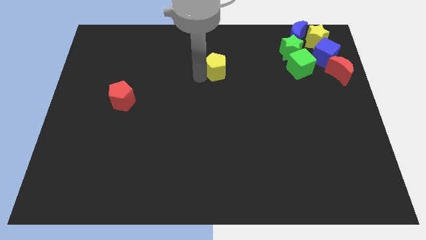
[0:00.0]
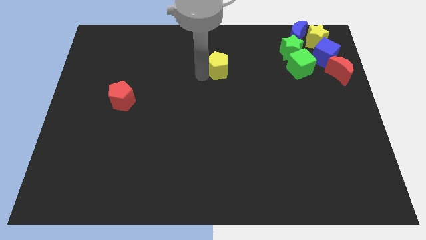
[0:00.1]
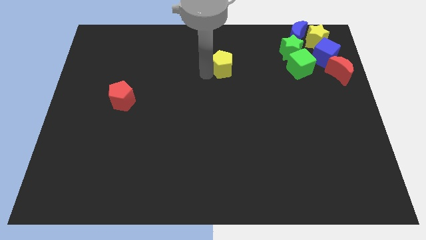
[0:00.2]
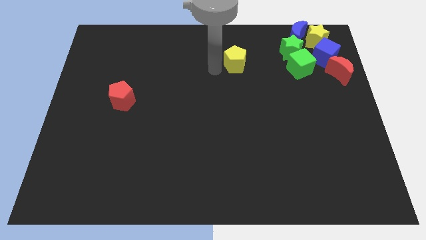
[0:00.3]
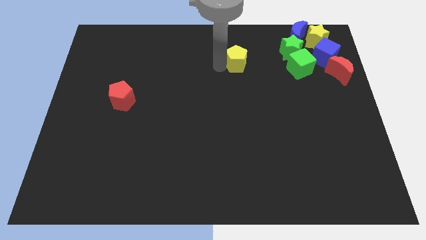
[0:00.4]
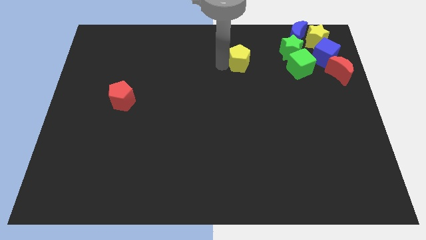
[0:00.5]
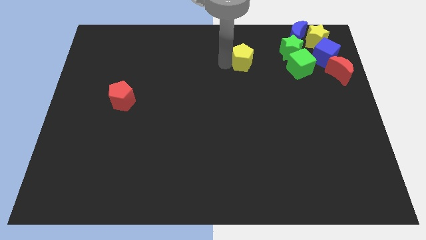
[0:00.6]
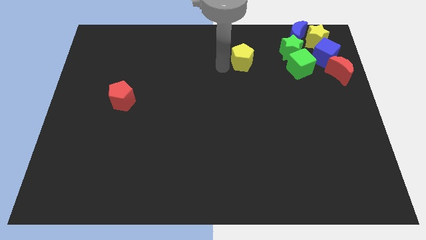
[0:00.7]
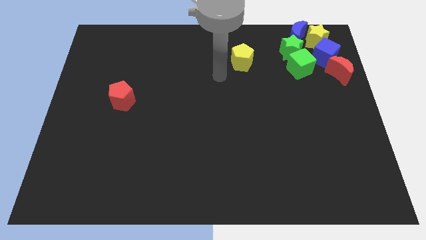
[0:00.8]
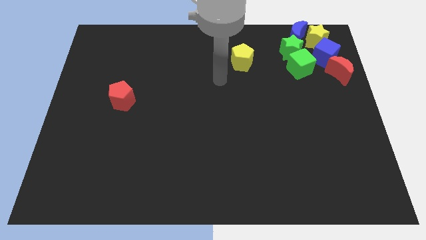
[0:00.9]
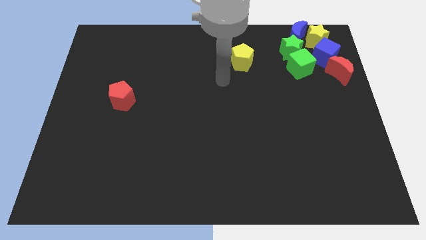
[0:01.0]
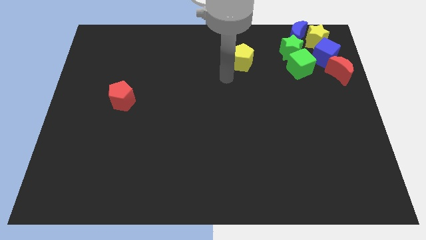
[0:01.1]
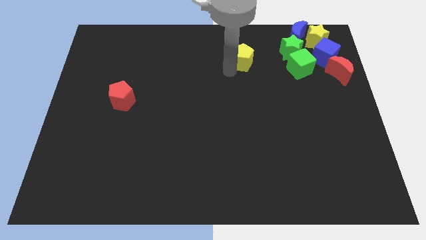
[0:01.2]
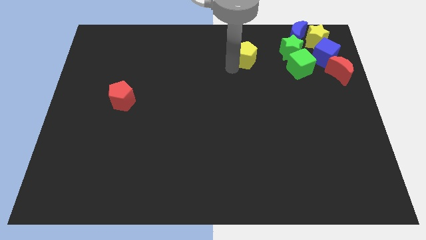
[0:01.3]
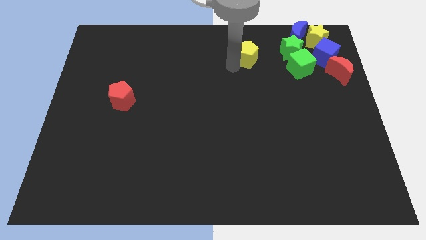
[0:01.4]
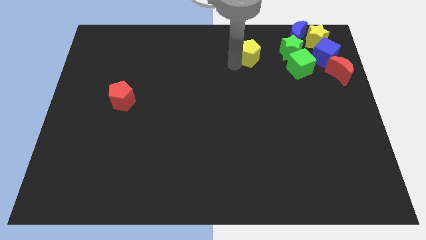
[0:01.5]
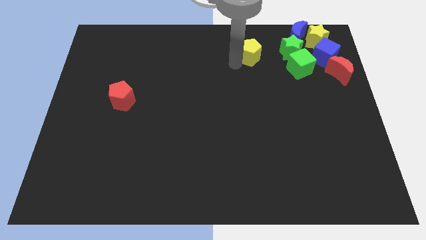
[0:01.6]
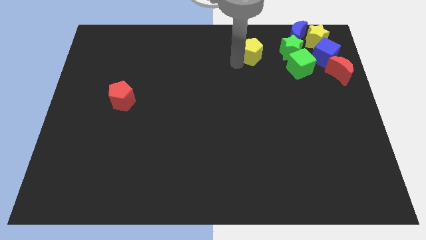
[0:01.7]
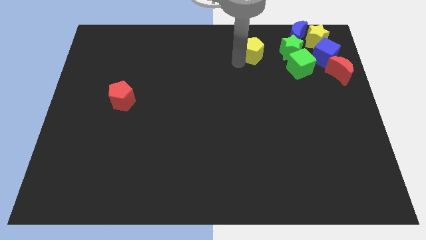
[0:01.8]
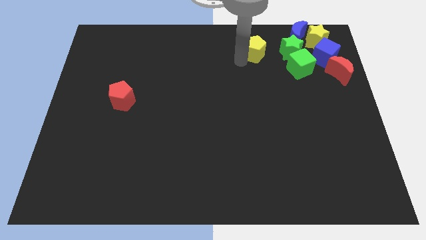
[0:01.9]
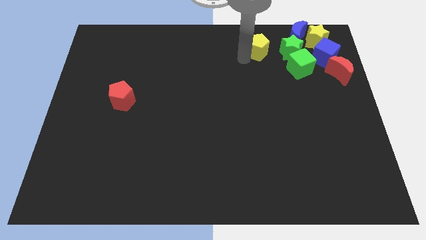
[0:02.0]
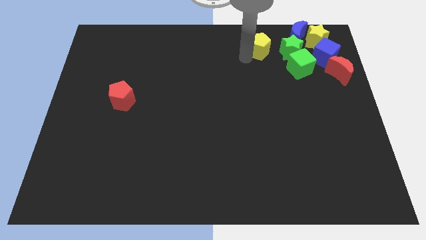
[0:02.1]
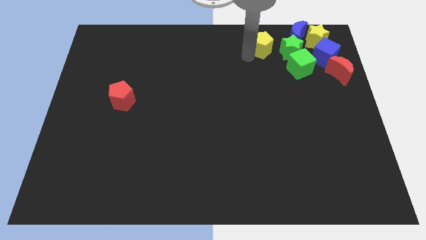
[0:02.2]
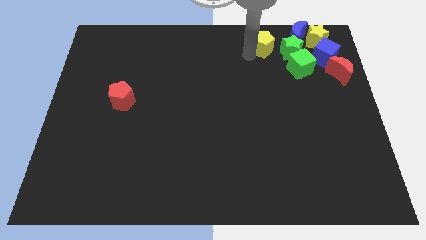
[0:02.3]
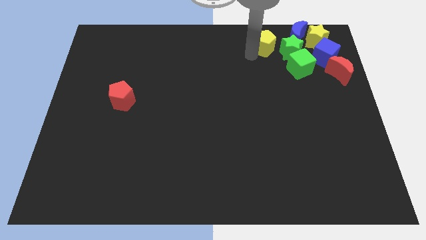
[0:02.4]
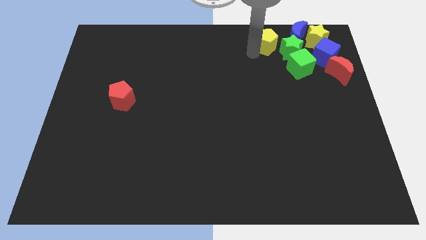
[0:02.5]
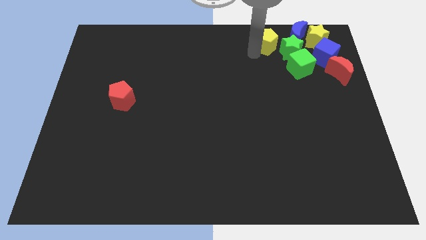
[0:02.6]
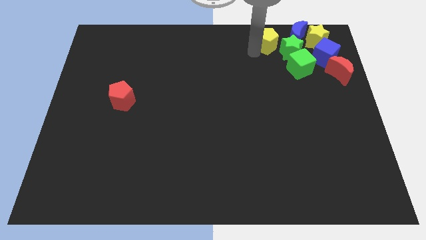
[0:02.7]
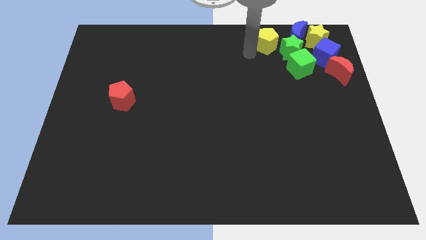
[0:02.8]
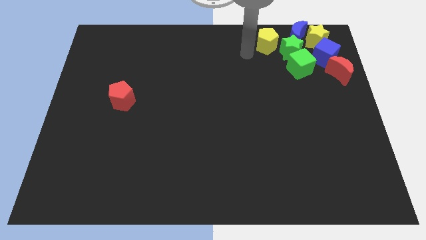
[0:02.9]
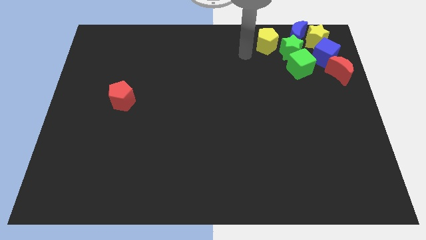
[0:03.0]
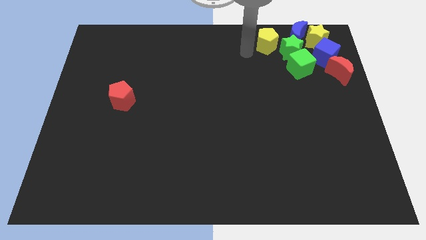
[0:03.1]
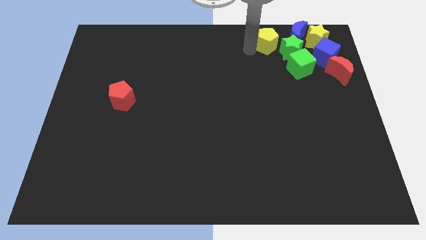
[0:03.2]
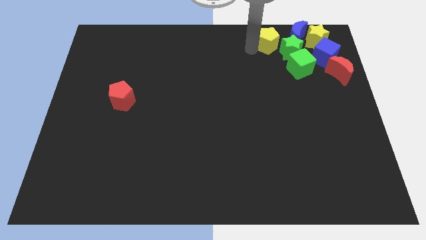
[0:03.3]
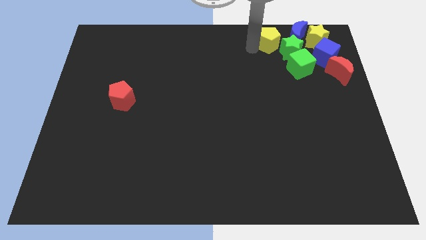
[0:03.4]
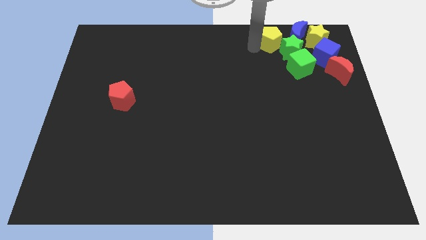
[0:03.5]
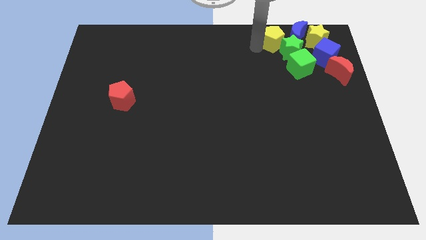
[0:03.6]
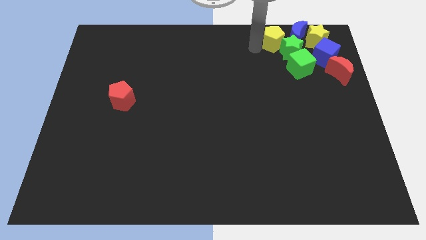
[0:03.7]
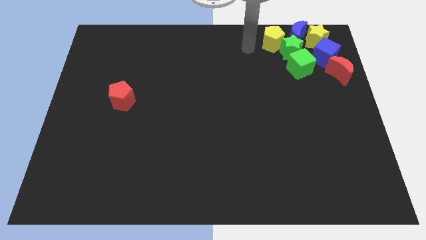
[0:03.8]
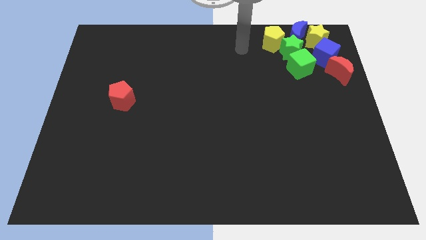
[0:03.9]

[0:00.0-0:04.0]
place the yellow pentagon beside the green star

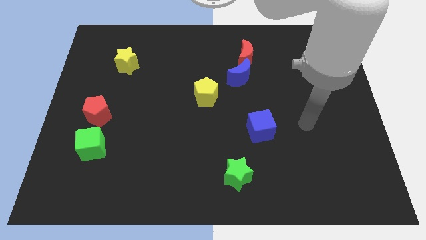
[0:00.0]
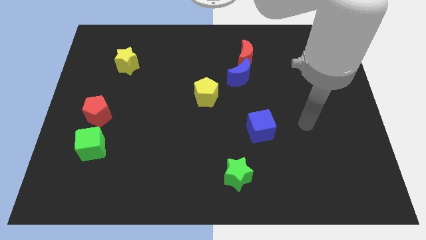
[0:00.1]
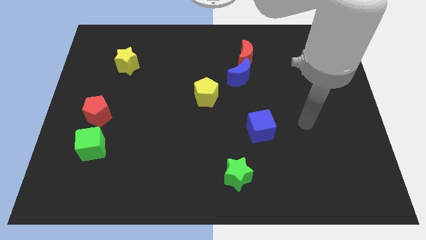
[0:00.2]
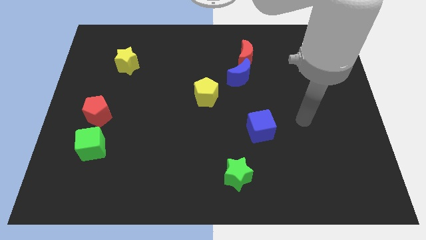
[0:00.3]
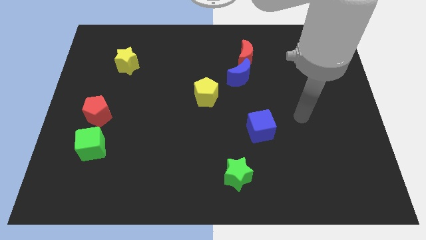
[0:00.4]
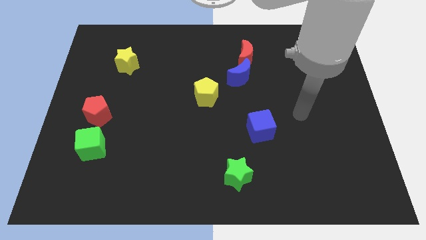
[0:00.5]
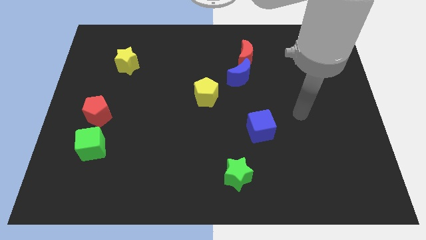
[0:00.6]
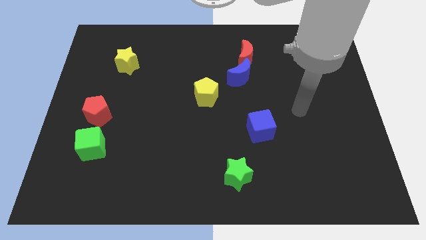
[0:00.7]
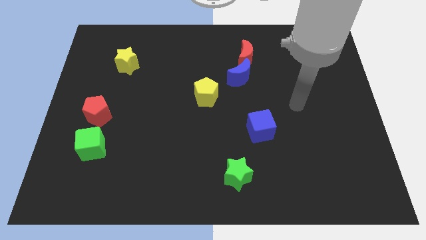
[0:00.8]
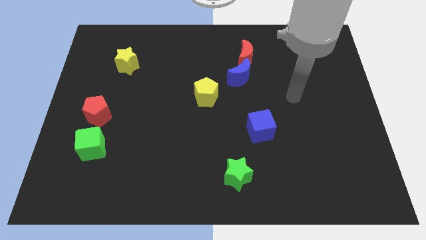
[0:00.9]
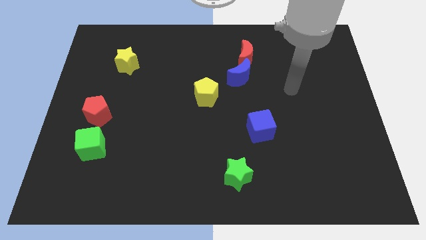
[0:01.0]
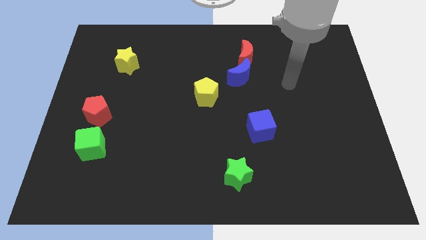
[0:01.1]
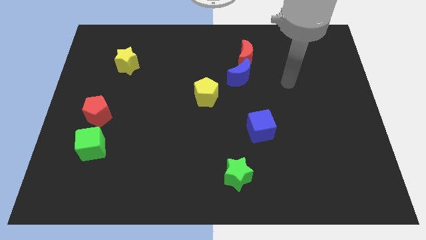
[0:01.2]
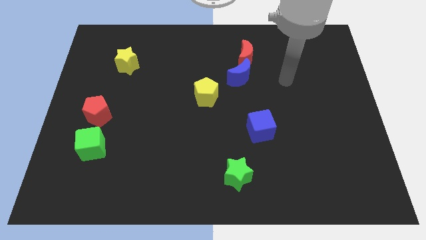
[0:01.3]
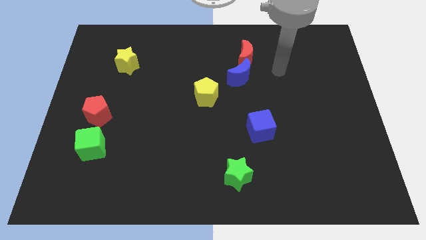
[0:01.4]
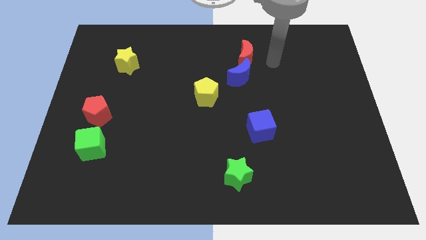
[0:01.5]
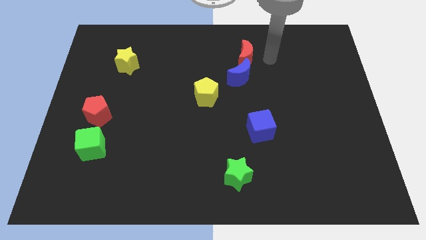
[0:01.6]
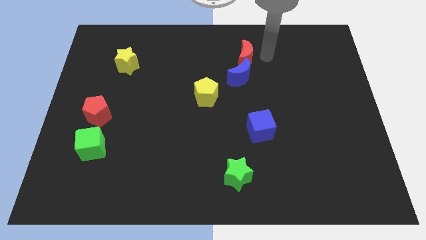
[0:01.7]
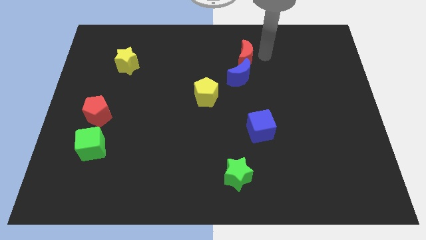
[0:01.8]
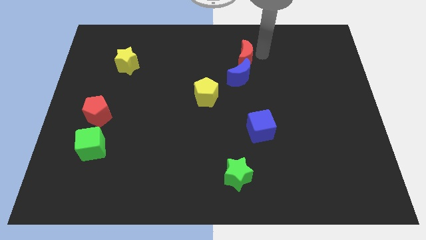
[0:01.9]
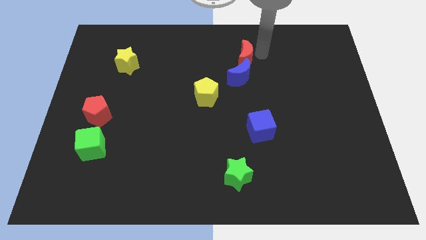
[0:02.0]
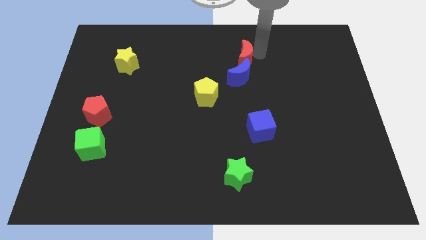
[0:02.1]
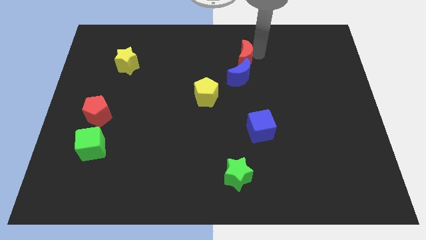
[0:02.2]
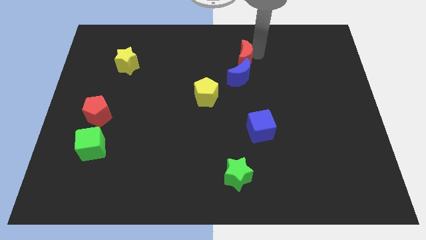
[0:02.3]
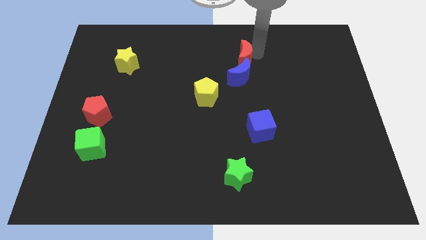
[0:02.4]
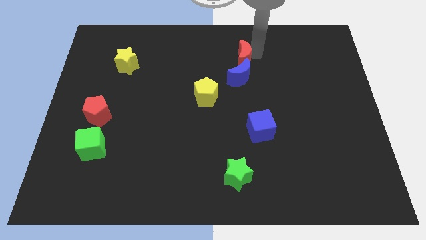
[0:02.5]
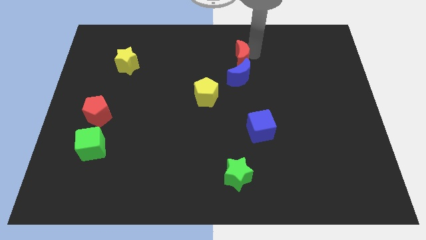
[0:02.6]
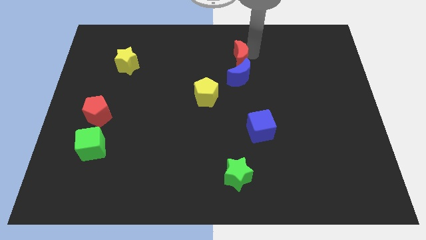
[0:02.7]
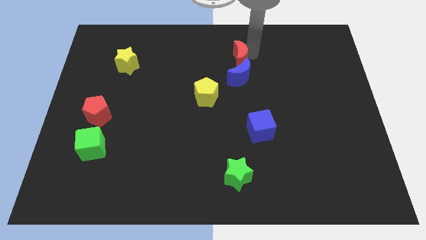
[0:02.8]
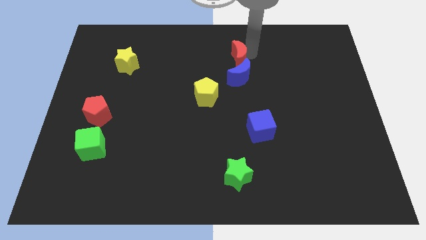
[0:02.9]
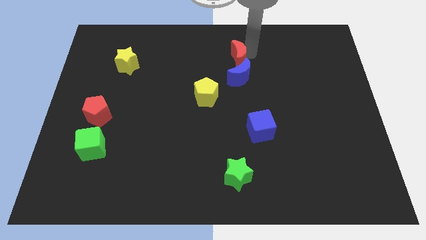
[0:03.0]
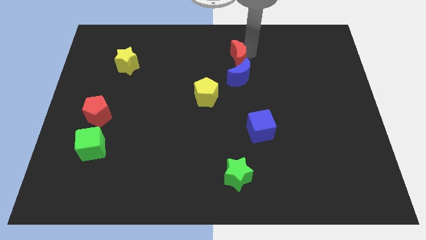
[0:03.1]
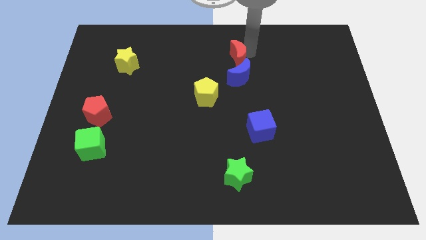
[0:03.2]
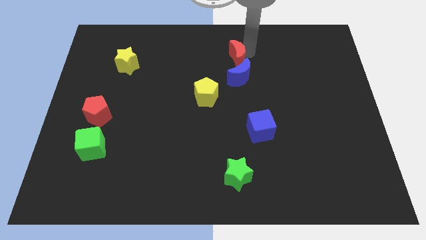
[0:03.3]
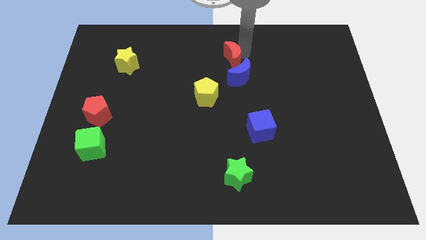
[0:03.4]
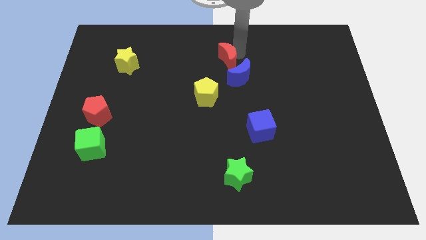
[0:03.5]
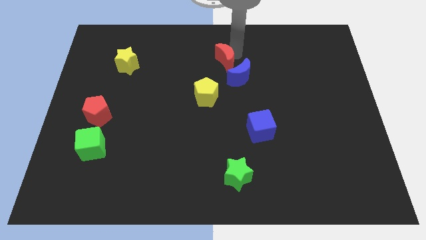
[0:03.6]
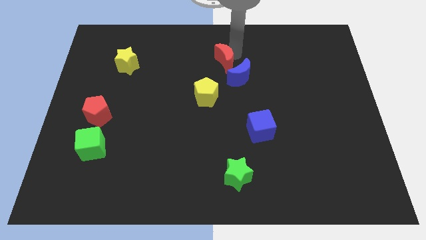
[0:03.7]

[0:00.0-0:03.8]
split red crescent from the blue crescent

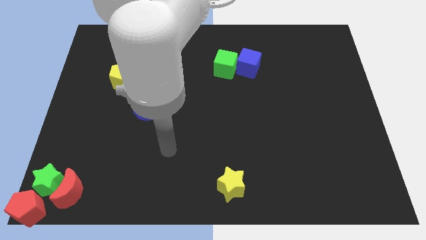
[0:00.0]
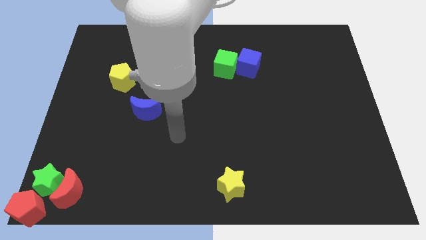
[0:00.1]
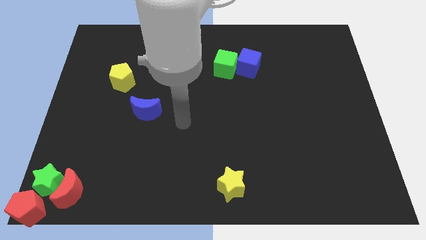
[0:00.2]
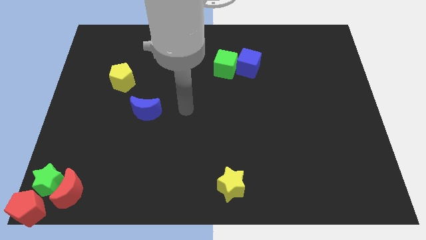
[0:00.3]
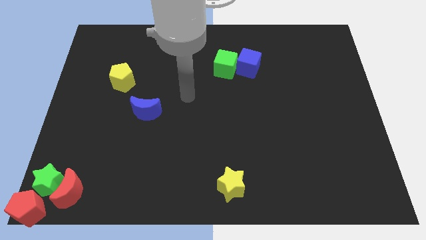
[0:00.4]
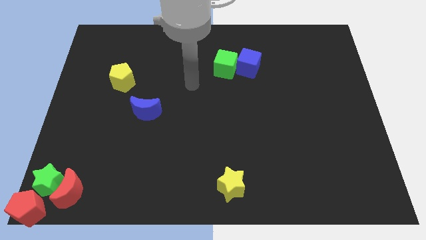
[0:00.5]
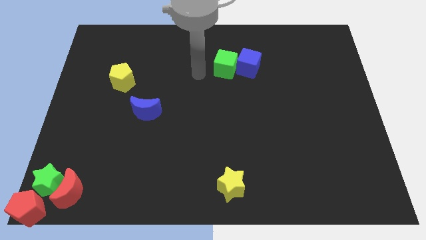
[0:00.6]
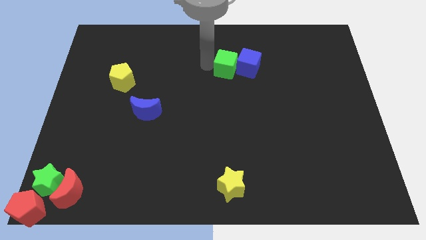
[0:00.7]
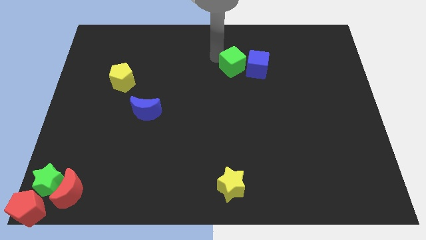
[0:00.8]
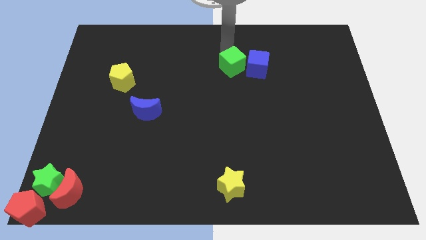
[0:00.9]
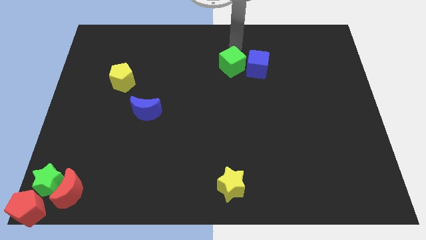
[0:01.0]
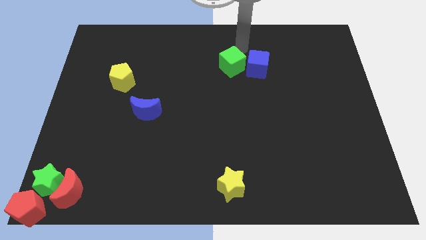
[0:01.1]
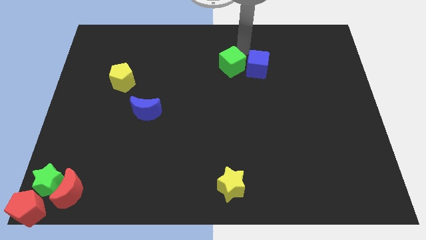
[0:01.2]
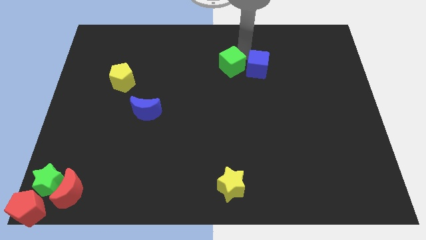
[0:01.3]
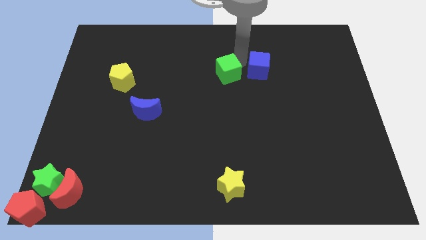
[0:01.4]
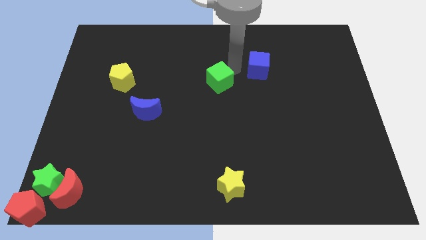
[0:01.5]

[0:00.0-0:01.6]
separate the green cube from the blue cube
